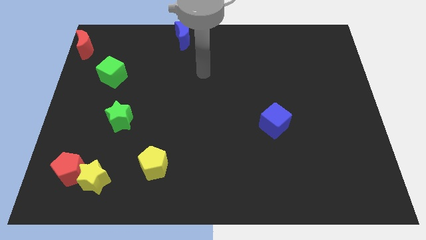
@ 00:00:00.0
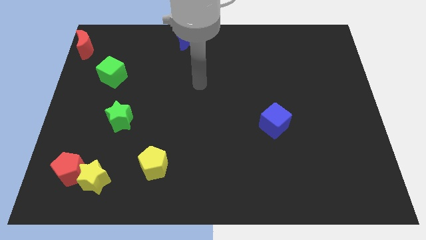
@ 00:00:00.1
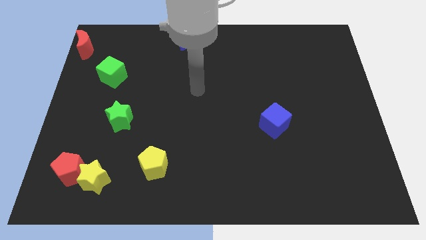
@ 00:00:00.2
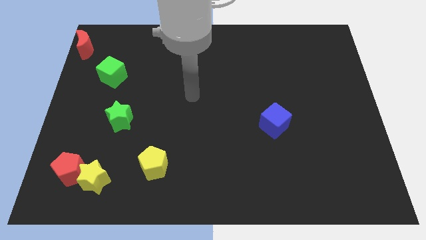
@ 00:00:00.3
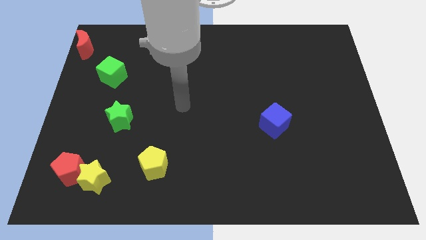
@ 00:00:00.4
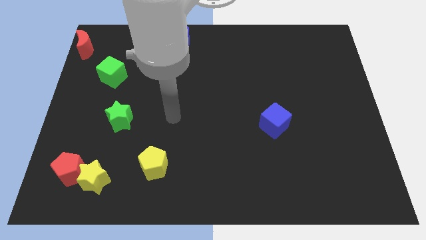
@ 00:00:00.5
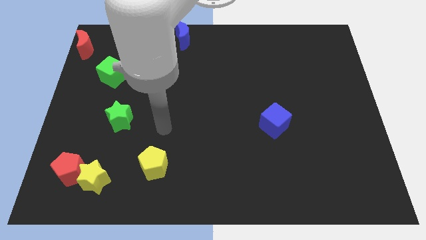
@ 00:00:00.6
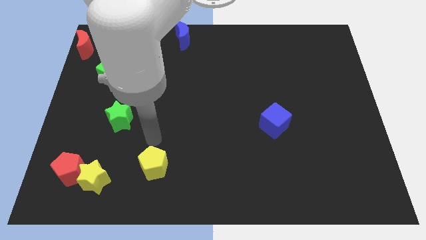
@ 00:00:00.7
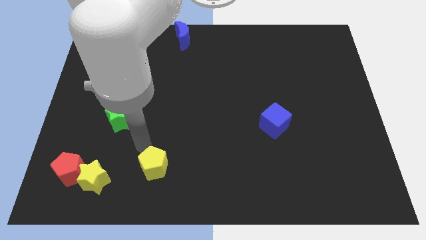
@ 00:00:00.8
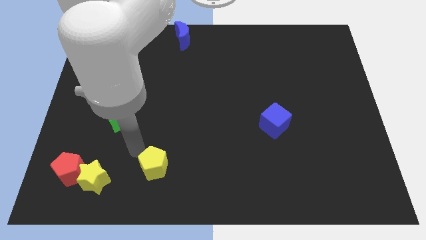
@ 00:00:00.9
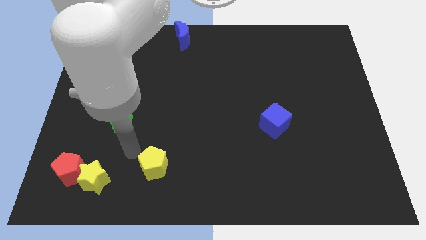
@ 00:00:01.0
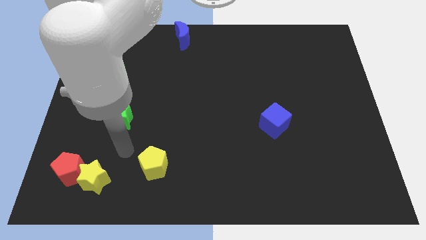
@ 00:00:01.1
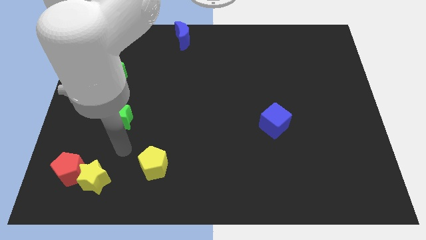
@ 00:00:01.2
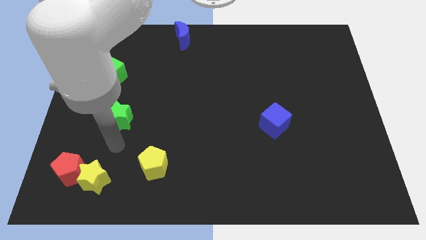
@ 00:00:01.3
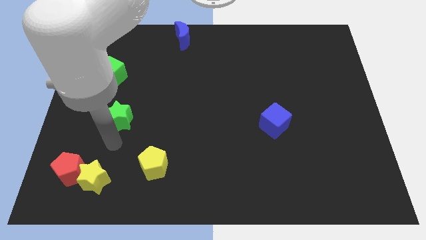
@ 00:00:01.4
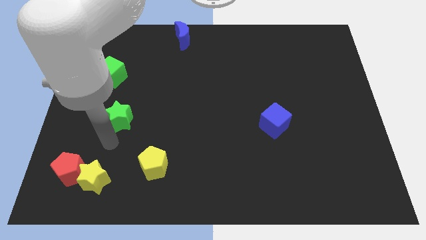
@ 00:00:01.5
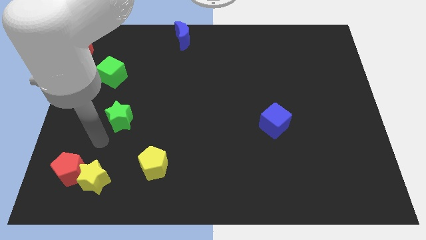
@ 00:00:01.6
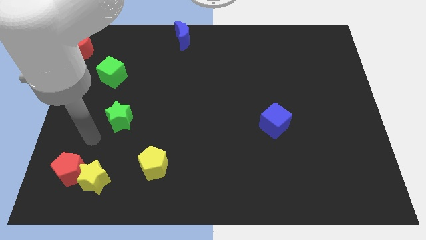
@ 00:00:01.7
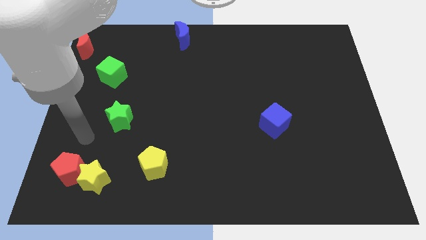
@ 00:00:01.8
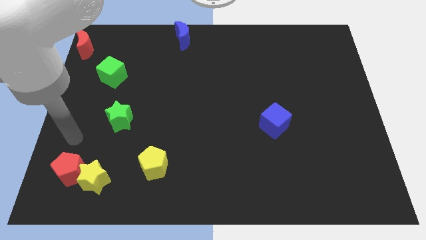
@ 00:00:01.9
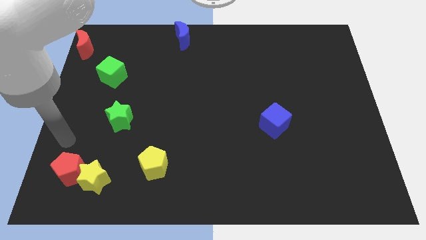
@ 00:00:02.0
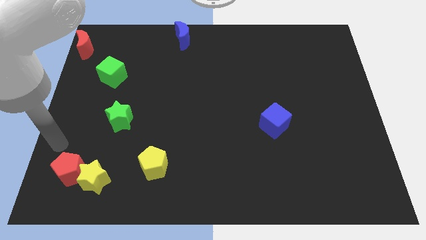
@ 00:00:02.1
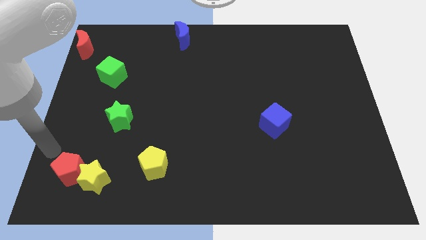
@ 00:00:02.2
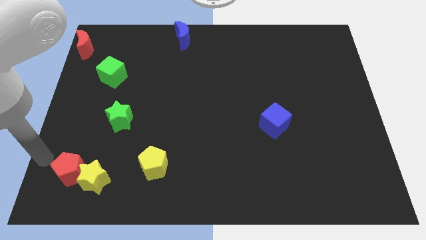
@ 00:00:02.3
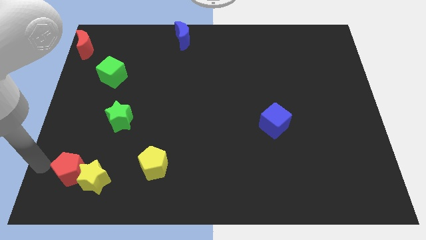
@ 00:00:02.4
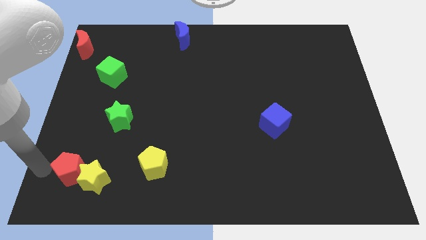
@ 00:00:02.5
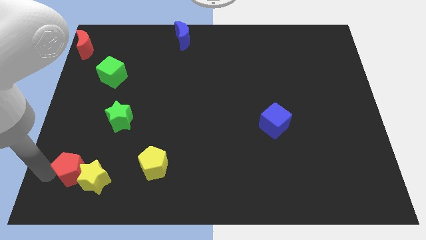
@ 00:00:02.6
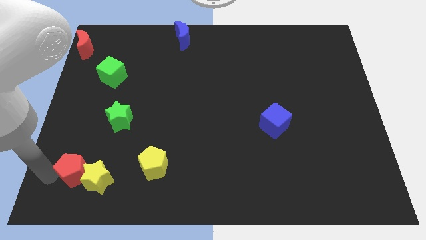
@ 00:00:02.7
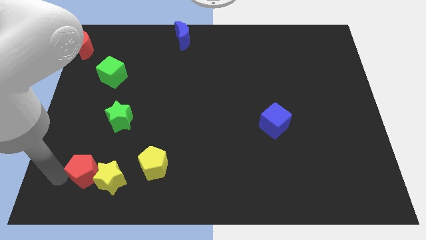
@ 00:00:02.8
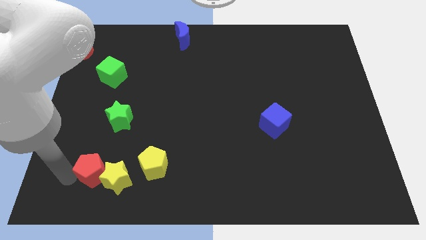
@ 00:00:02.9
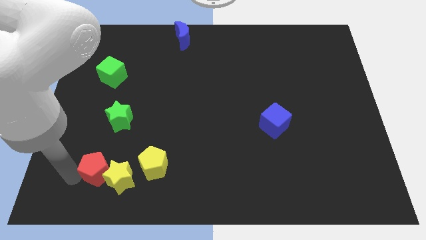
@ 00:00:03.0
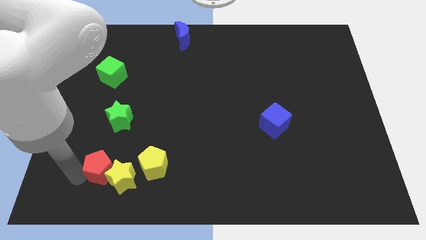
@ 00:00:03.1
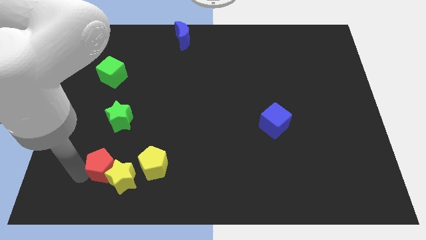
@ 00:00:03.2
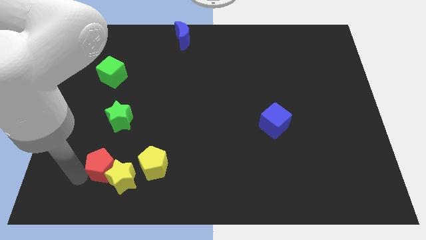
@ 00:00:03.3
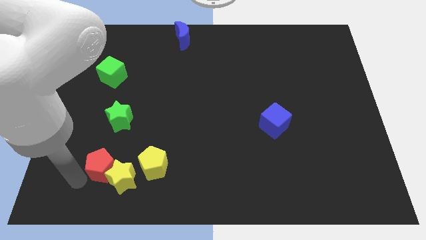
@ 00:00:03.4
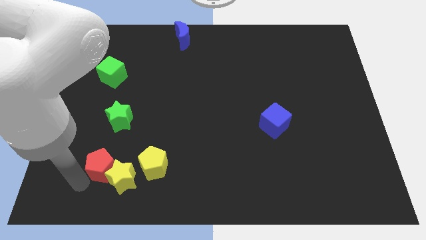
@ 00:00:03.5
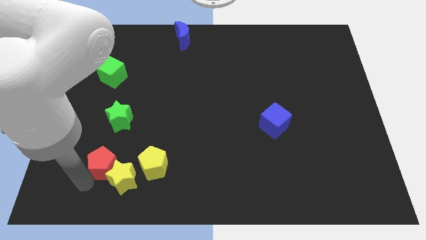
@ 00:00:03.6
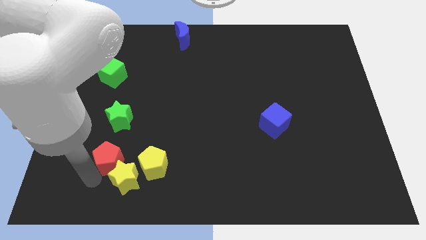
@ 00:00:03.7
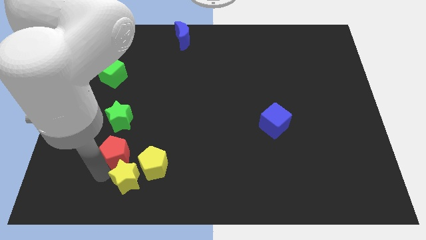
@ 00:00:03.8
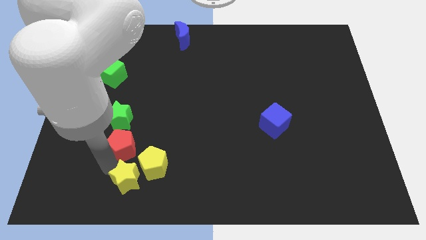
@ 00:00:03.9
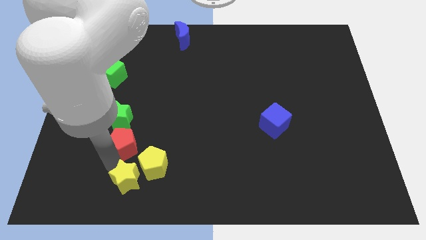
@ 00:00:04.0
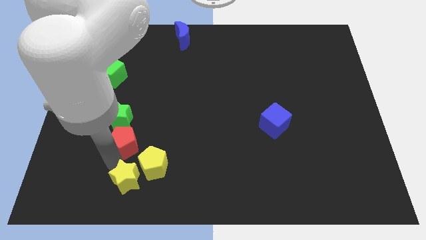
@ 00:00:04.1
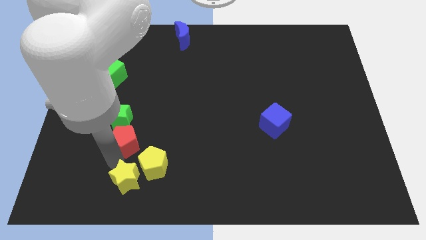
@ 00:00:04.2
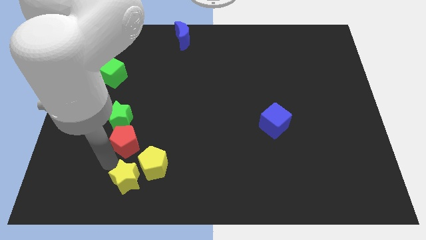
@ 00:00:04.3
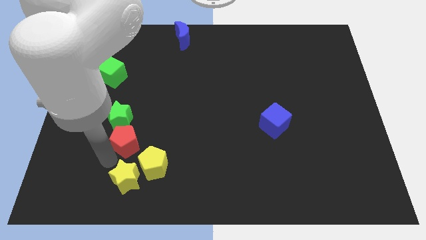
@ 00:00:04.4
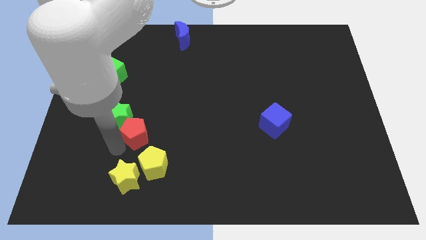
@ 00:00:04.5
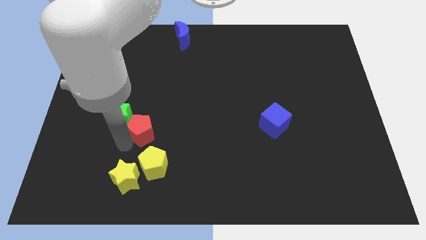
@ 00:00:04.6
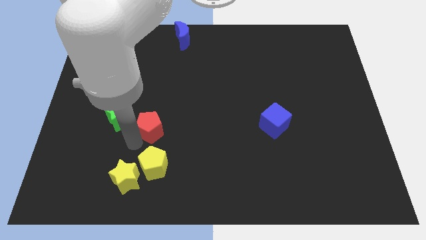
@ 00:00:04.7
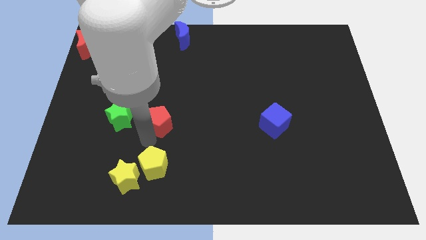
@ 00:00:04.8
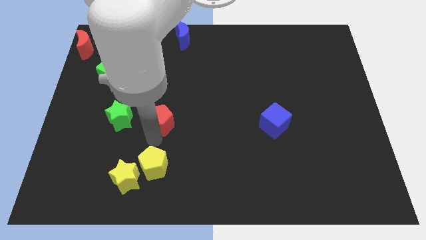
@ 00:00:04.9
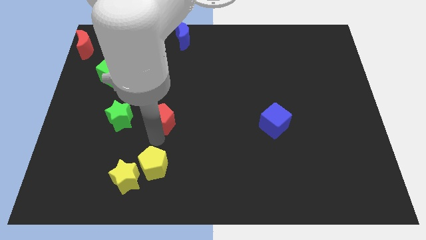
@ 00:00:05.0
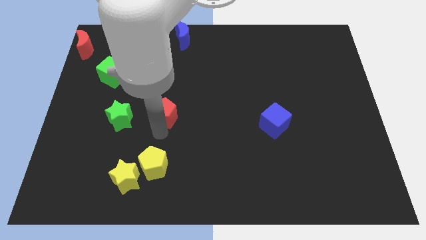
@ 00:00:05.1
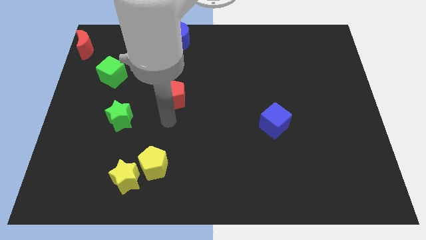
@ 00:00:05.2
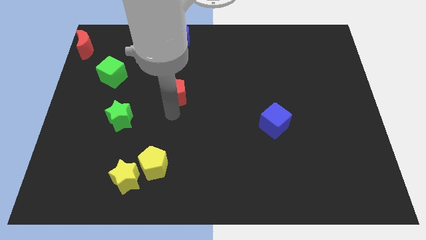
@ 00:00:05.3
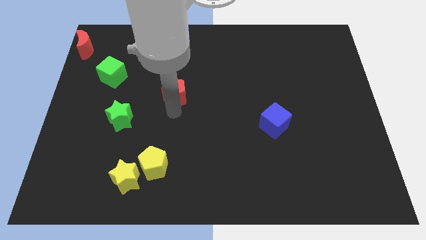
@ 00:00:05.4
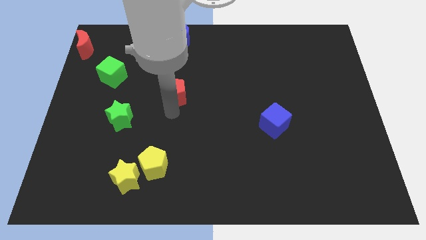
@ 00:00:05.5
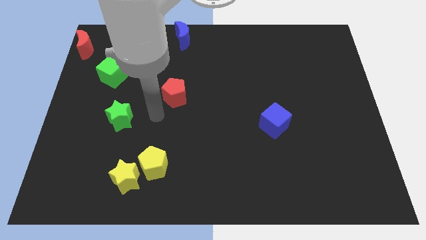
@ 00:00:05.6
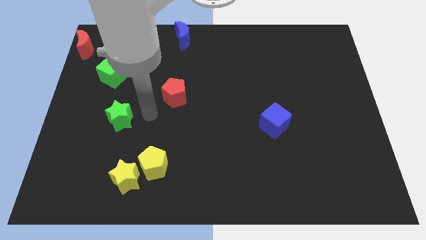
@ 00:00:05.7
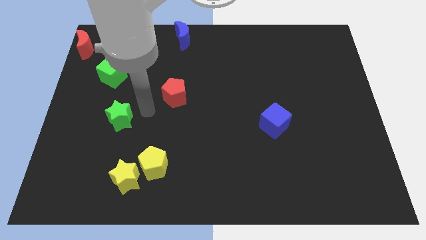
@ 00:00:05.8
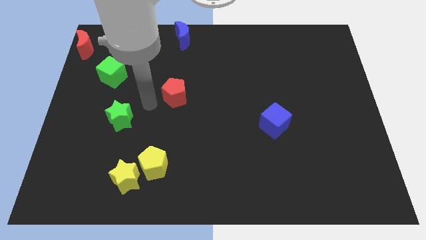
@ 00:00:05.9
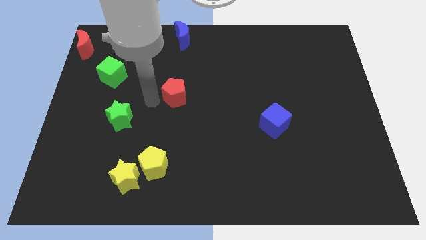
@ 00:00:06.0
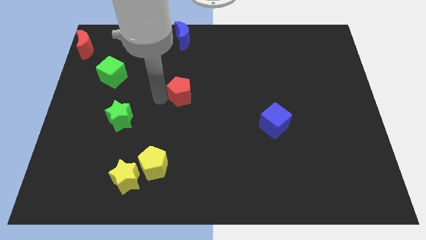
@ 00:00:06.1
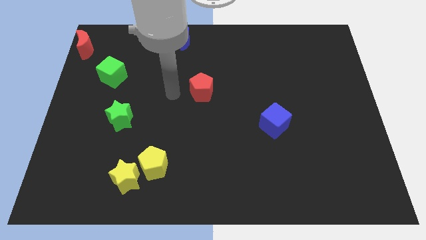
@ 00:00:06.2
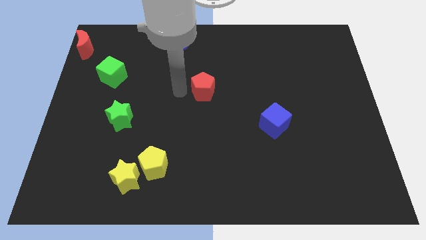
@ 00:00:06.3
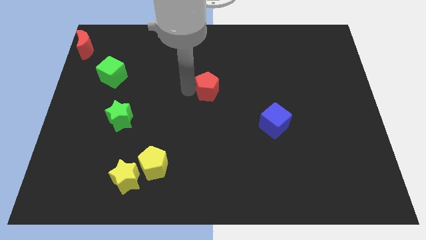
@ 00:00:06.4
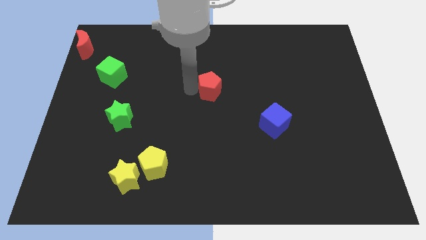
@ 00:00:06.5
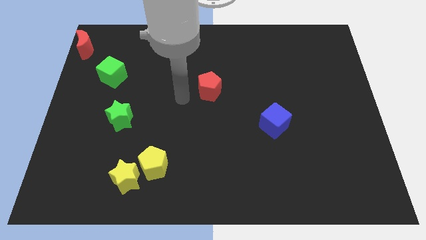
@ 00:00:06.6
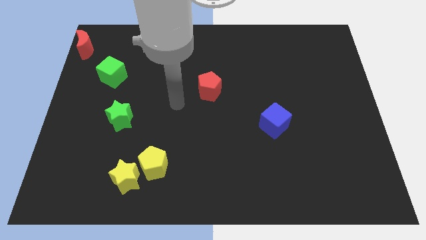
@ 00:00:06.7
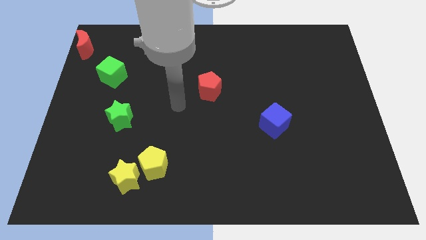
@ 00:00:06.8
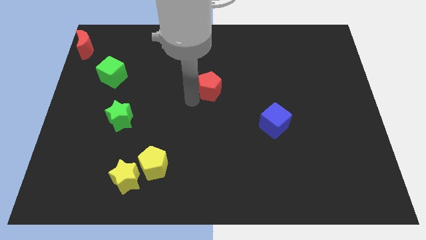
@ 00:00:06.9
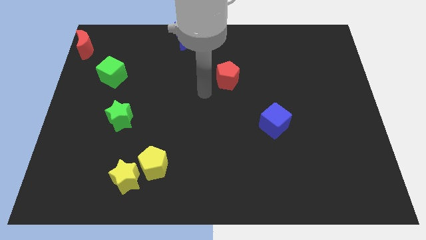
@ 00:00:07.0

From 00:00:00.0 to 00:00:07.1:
place the red pentagon in between the blue moon and blue cube

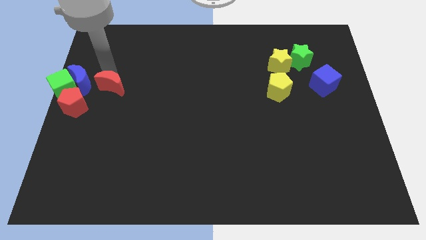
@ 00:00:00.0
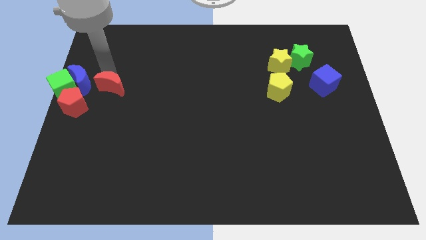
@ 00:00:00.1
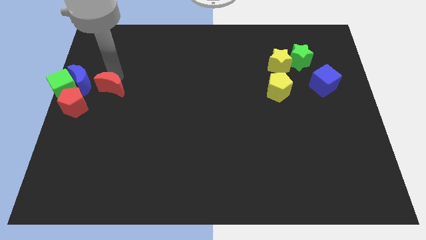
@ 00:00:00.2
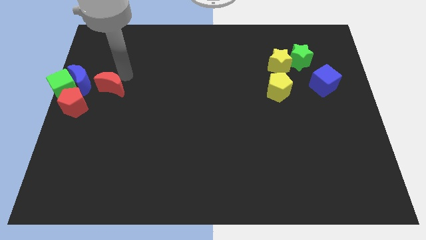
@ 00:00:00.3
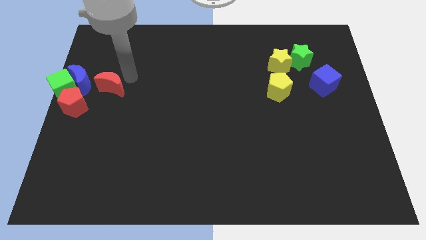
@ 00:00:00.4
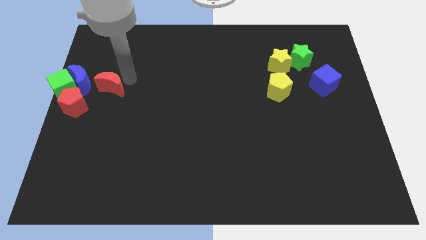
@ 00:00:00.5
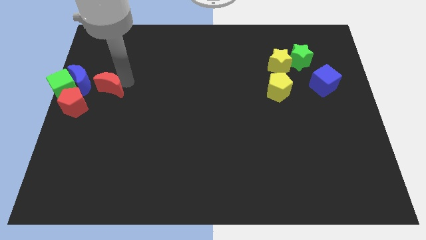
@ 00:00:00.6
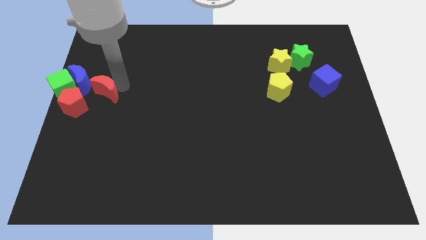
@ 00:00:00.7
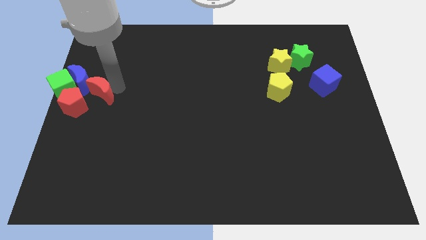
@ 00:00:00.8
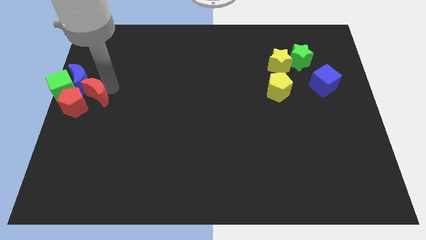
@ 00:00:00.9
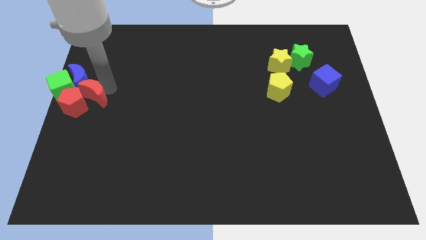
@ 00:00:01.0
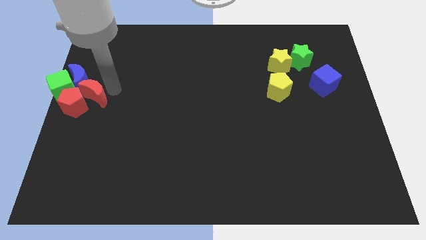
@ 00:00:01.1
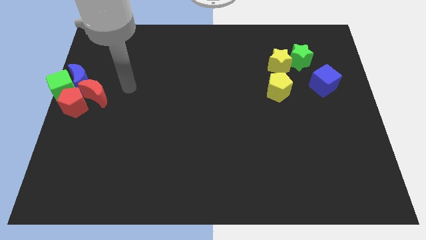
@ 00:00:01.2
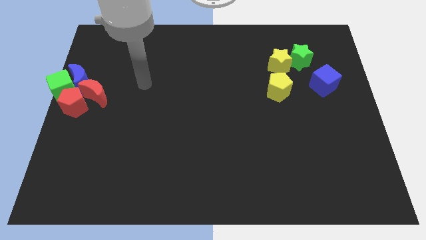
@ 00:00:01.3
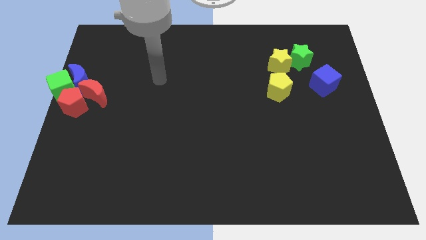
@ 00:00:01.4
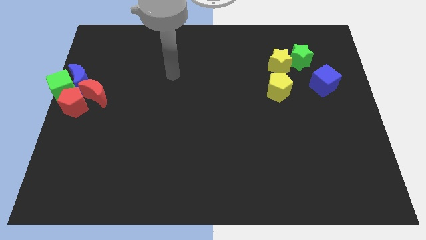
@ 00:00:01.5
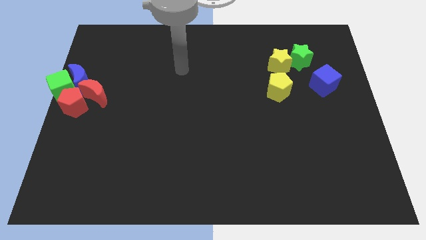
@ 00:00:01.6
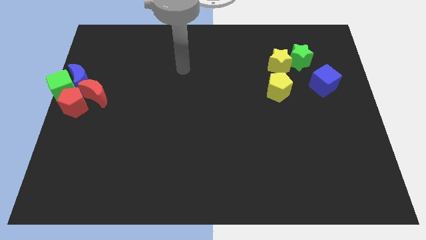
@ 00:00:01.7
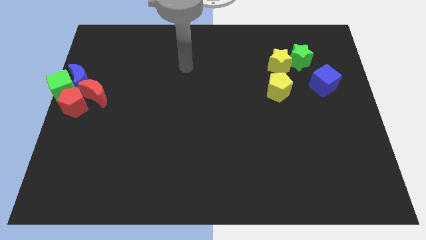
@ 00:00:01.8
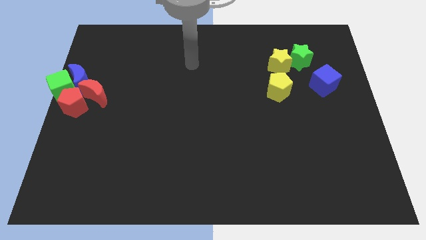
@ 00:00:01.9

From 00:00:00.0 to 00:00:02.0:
push the red moon to the red pentagon
